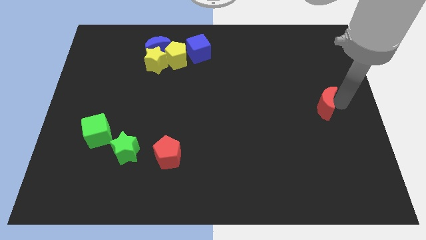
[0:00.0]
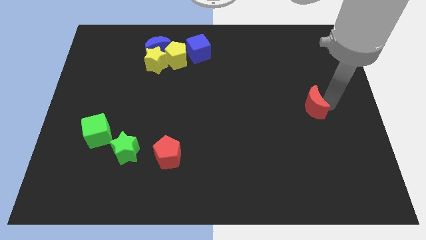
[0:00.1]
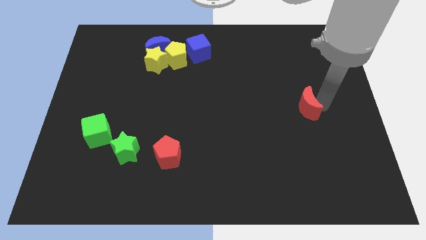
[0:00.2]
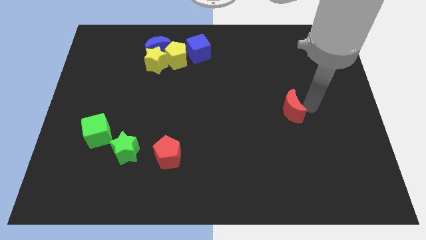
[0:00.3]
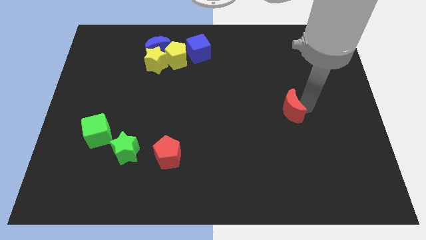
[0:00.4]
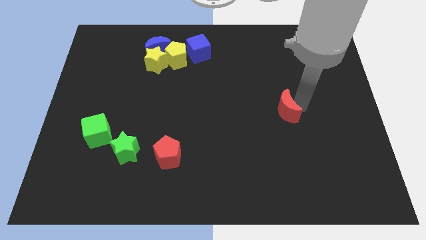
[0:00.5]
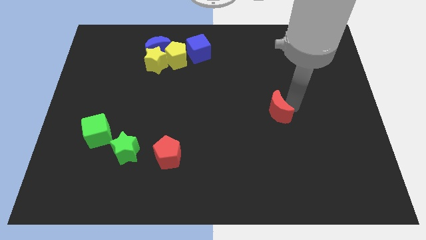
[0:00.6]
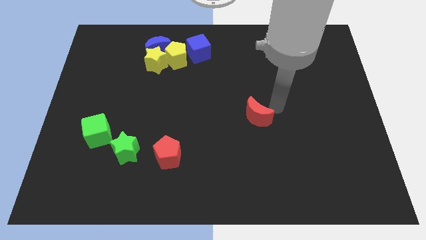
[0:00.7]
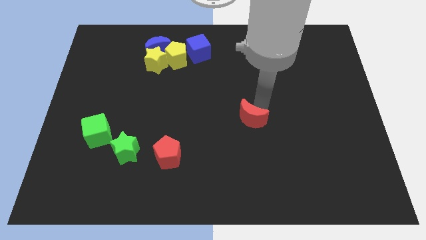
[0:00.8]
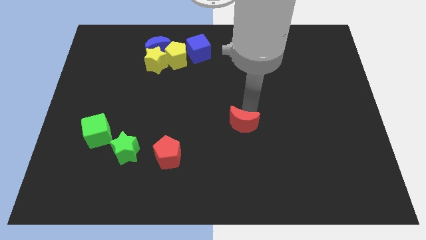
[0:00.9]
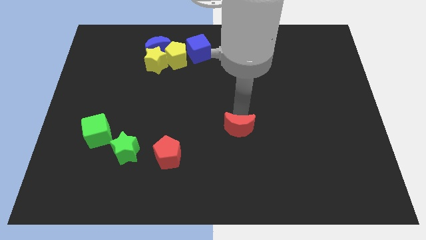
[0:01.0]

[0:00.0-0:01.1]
place the red moon diagonally to the bottom right of the blue cube

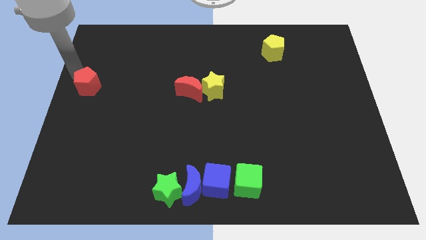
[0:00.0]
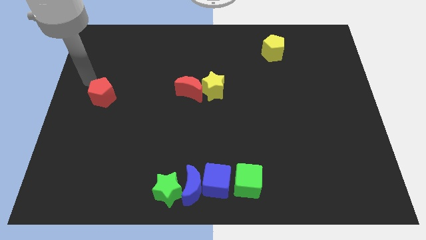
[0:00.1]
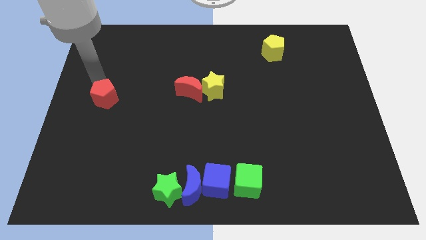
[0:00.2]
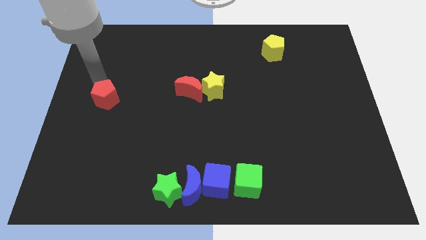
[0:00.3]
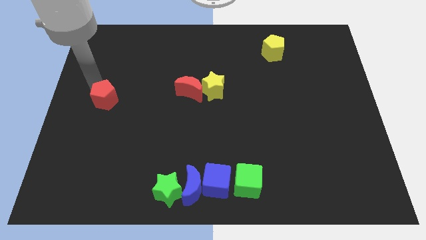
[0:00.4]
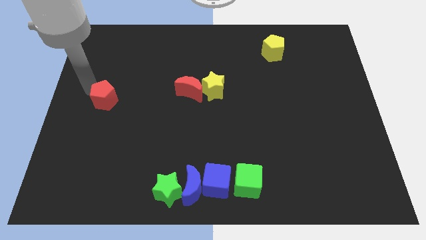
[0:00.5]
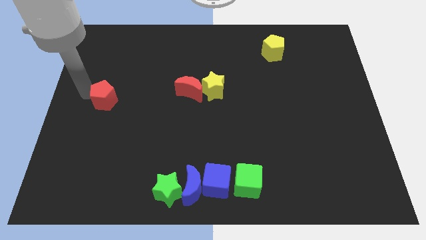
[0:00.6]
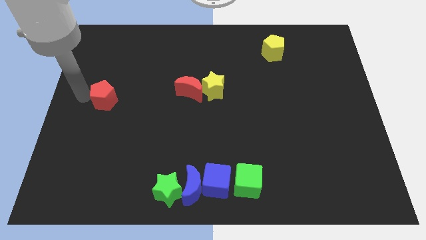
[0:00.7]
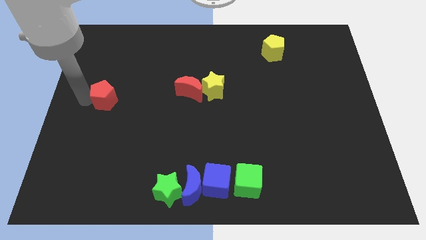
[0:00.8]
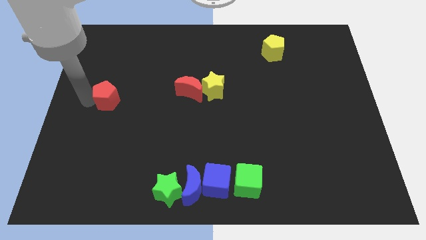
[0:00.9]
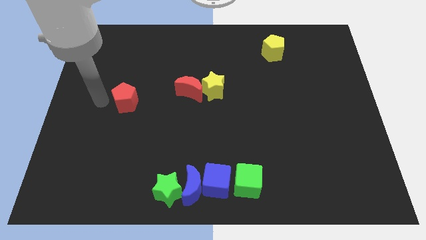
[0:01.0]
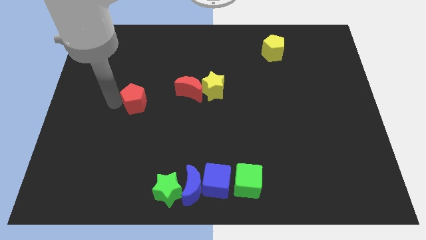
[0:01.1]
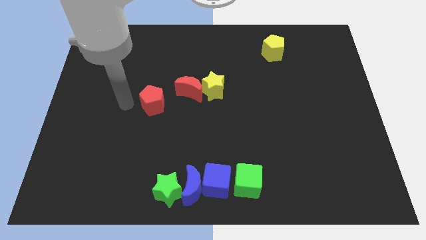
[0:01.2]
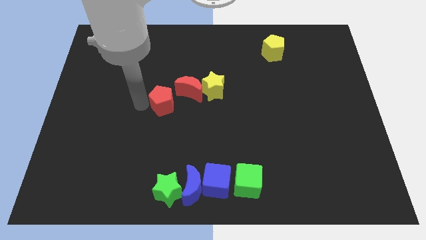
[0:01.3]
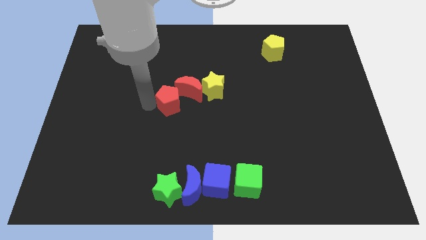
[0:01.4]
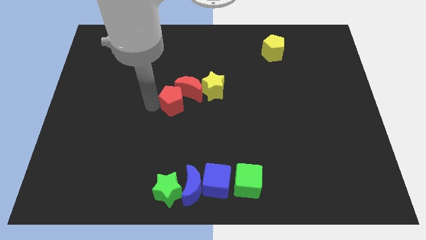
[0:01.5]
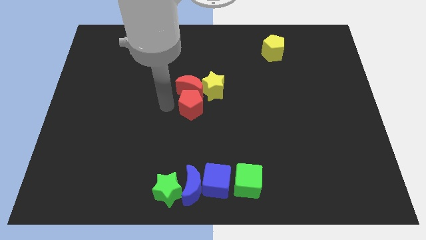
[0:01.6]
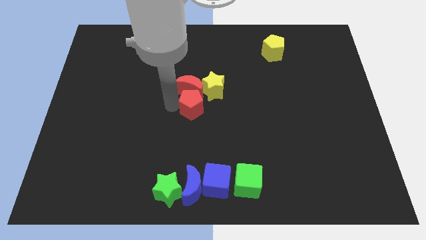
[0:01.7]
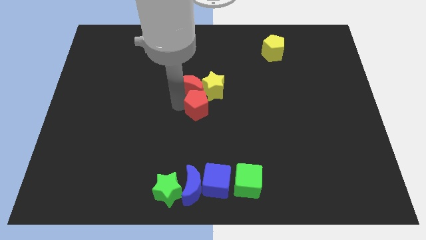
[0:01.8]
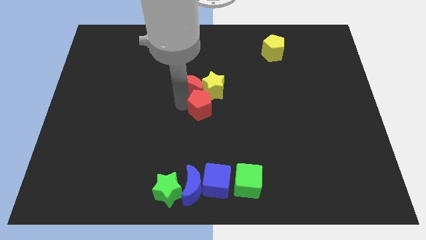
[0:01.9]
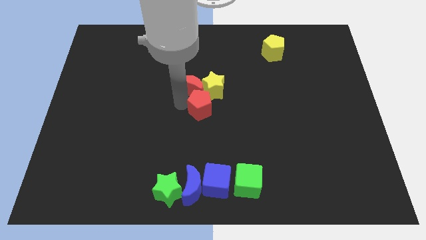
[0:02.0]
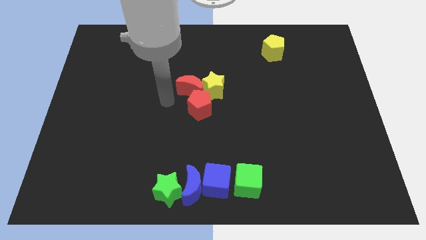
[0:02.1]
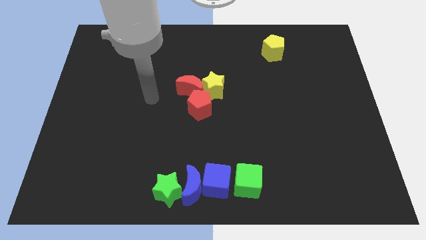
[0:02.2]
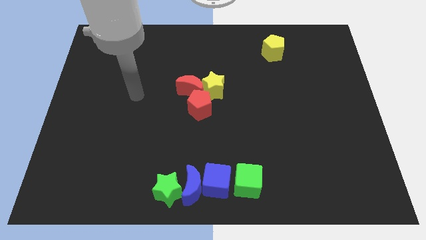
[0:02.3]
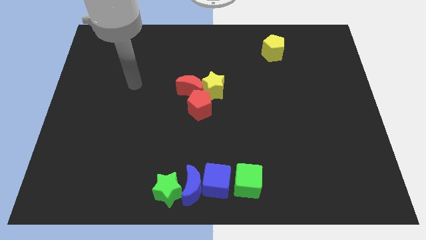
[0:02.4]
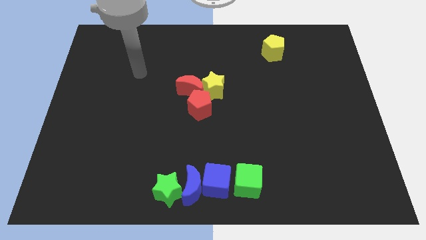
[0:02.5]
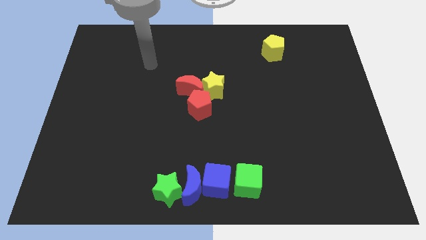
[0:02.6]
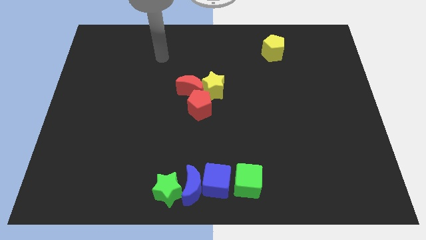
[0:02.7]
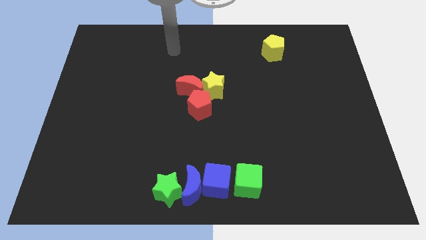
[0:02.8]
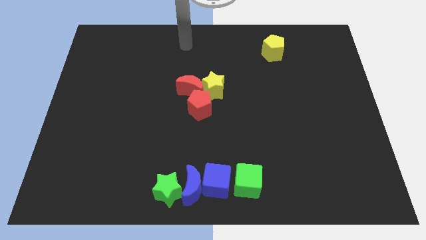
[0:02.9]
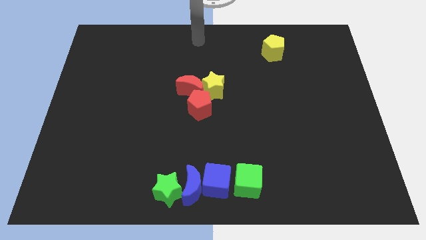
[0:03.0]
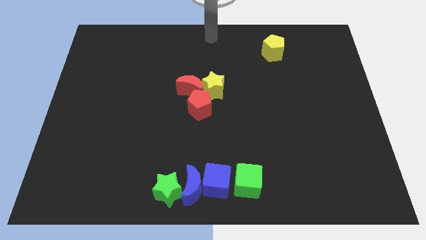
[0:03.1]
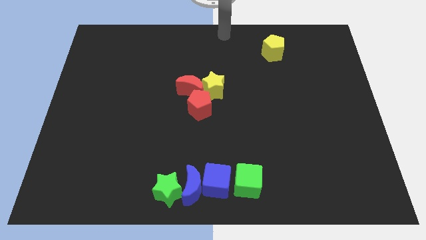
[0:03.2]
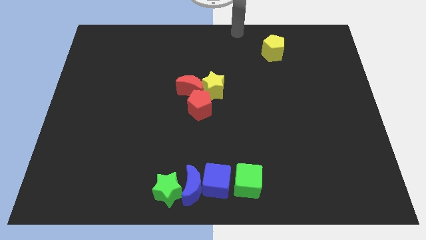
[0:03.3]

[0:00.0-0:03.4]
push the red pentagon into the red moon and the yellow star

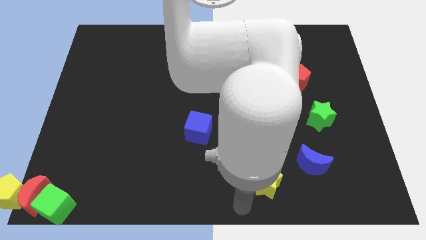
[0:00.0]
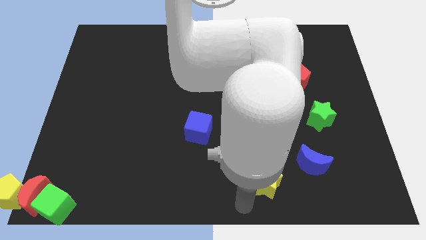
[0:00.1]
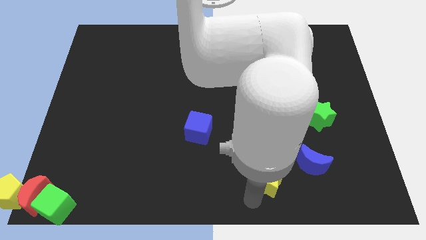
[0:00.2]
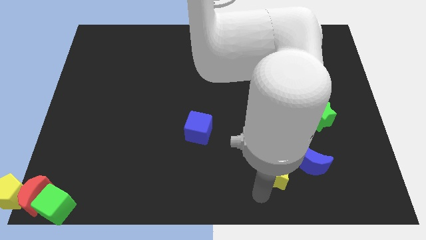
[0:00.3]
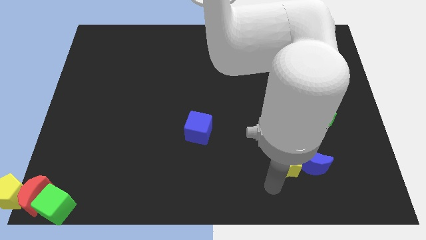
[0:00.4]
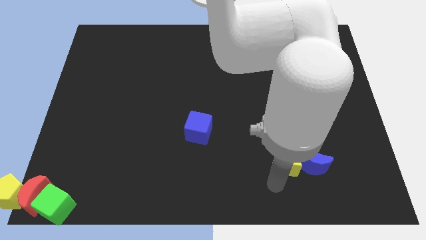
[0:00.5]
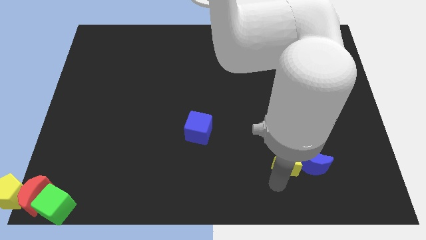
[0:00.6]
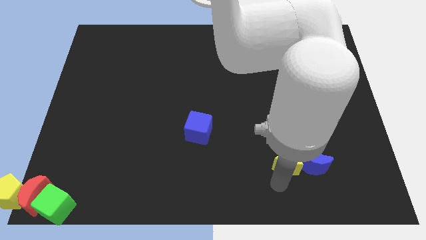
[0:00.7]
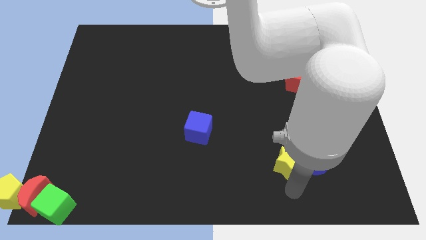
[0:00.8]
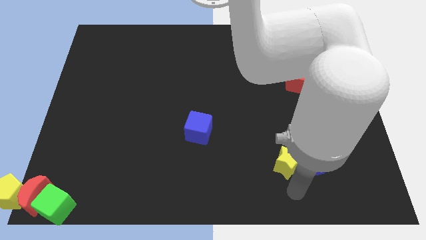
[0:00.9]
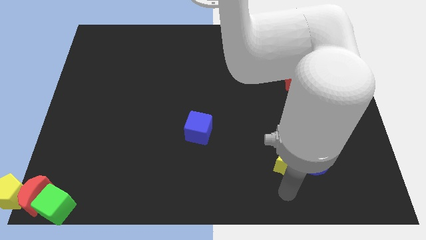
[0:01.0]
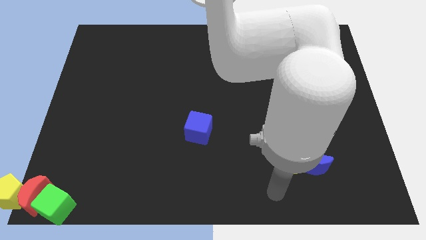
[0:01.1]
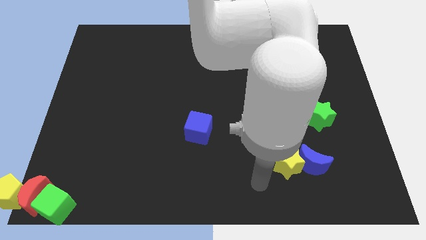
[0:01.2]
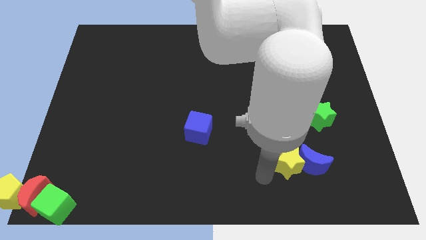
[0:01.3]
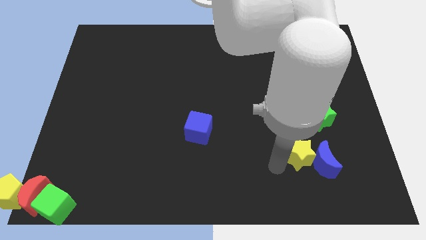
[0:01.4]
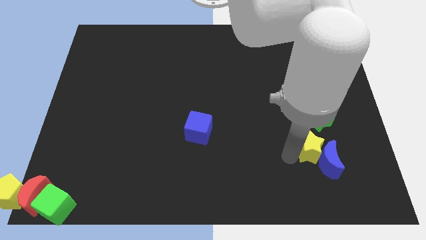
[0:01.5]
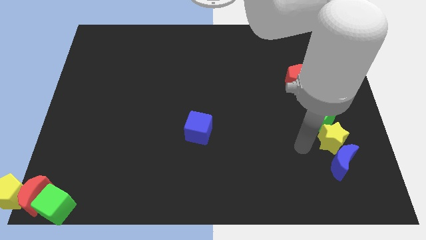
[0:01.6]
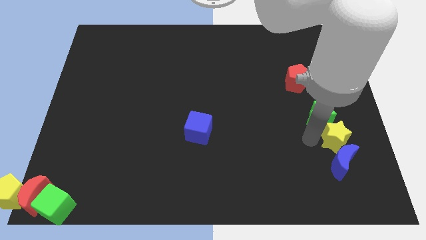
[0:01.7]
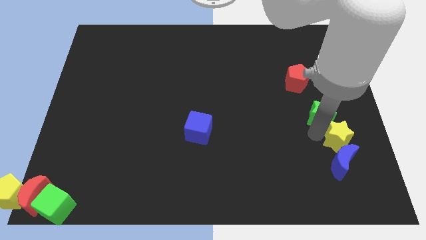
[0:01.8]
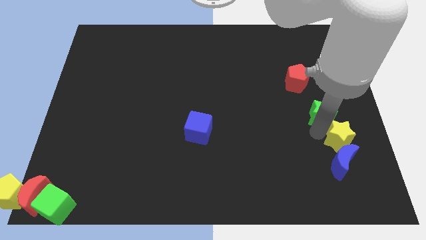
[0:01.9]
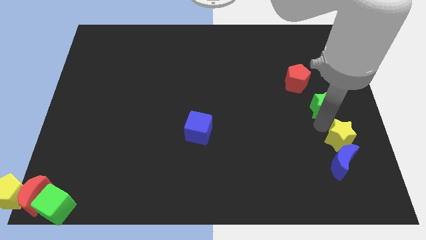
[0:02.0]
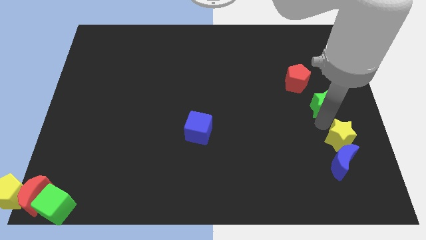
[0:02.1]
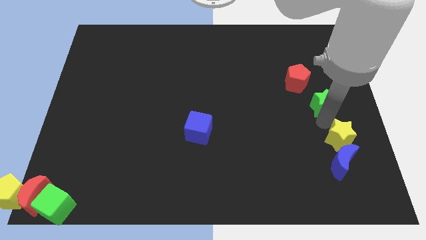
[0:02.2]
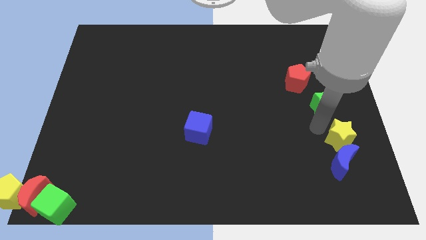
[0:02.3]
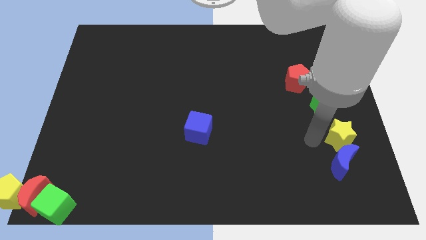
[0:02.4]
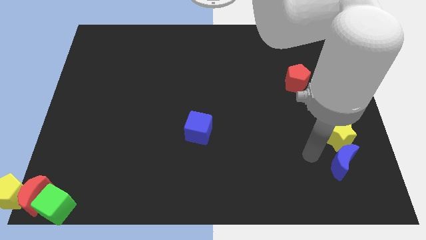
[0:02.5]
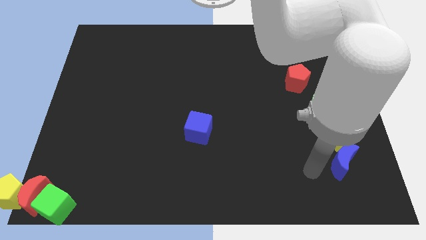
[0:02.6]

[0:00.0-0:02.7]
push the yellow star to the top of the blue crescent

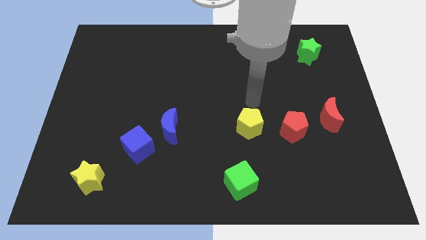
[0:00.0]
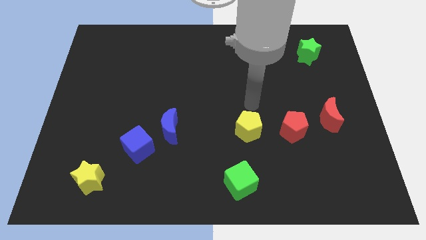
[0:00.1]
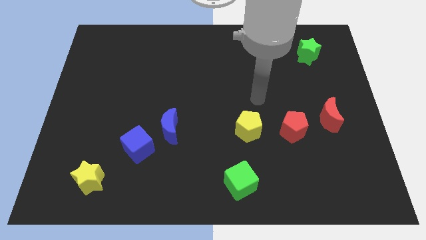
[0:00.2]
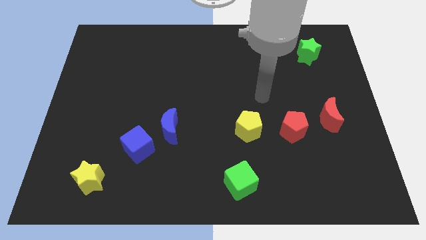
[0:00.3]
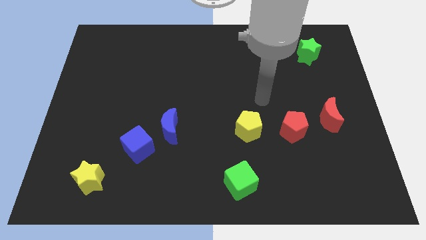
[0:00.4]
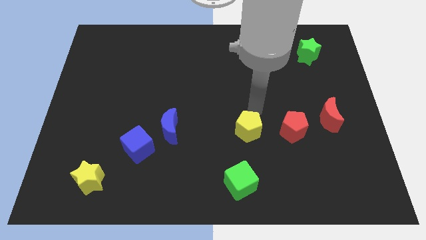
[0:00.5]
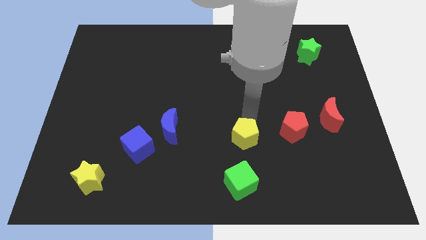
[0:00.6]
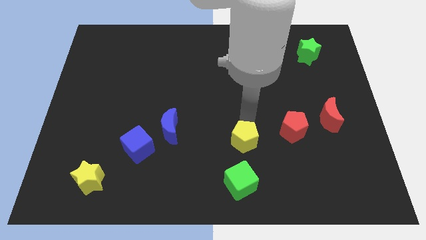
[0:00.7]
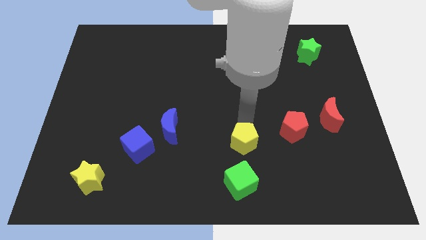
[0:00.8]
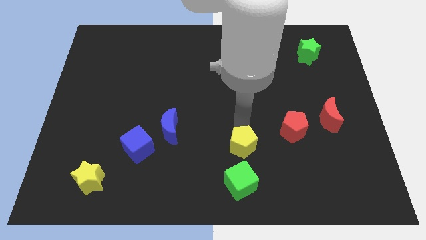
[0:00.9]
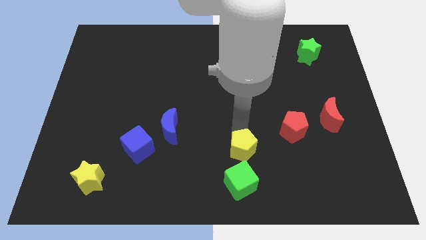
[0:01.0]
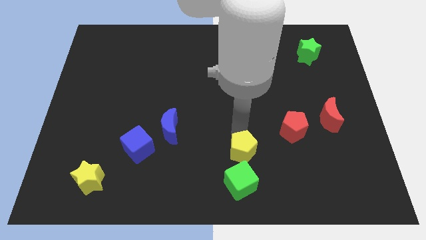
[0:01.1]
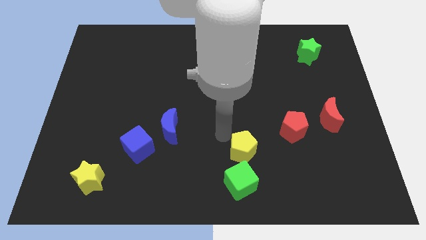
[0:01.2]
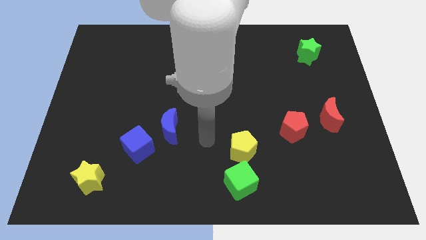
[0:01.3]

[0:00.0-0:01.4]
place the yellow pentagon to the top of the green star

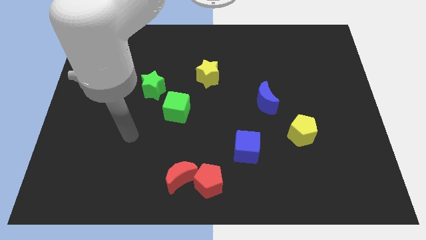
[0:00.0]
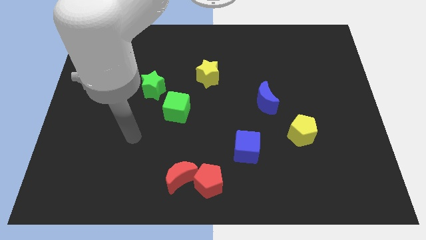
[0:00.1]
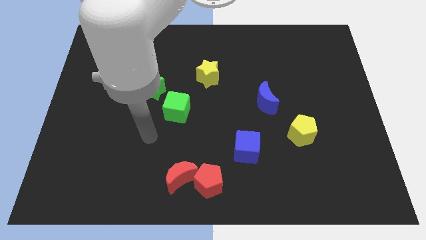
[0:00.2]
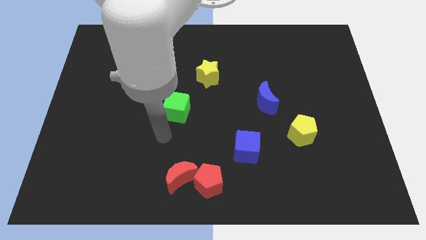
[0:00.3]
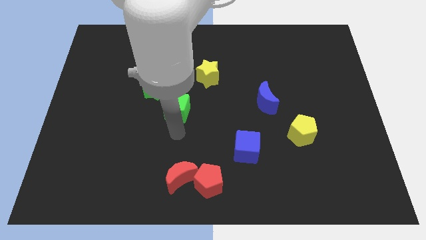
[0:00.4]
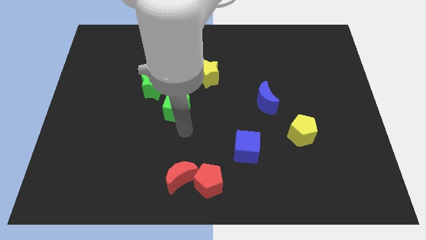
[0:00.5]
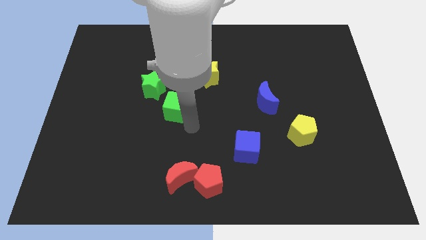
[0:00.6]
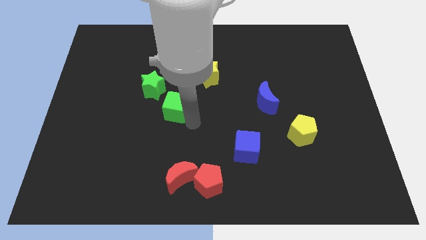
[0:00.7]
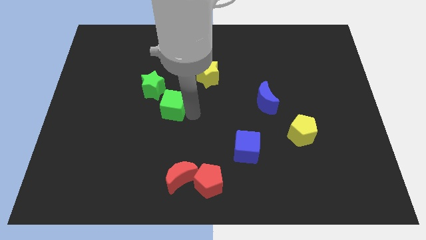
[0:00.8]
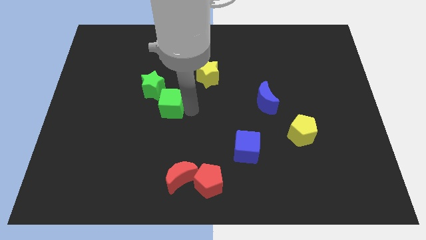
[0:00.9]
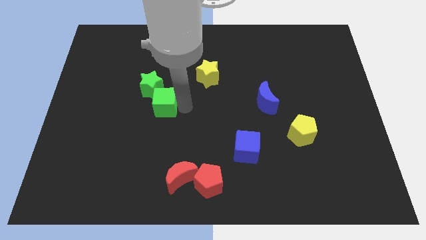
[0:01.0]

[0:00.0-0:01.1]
push the green cube into the green star
